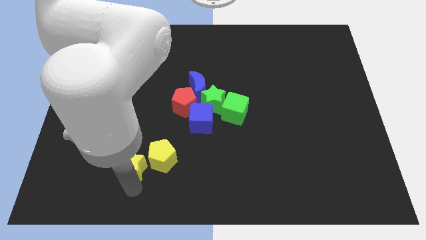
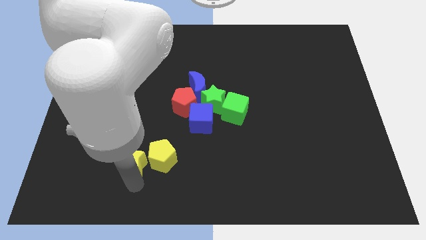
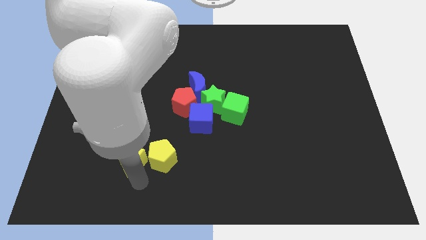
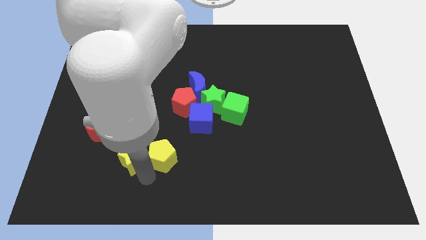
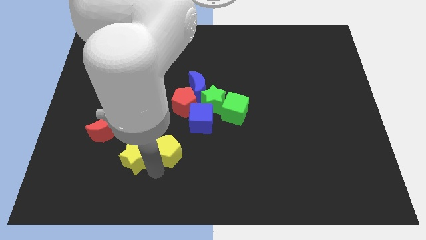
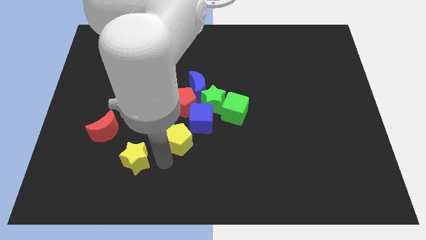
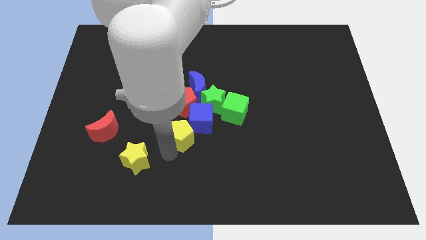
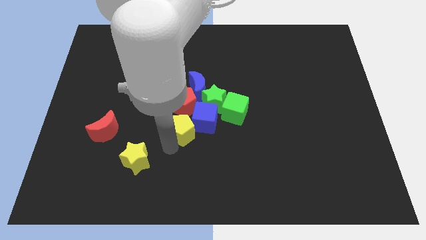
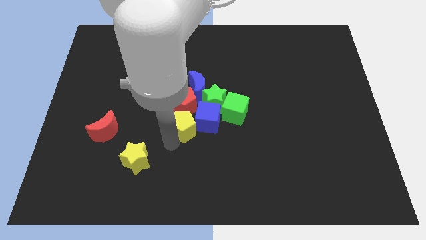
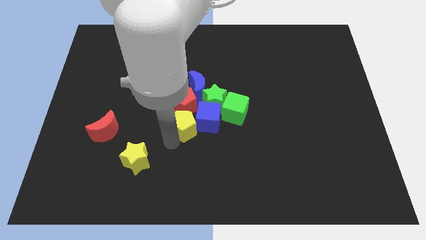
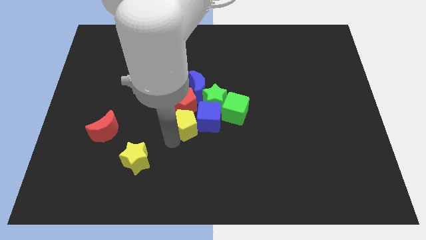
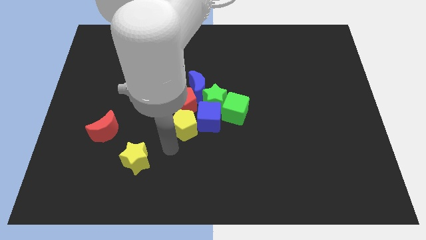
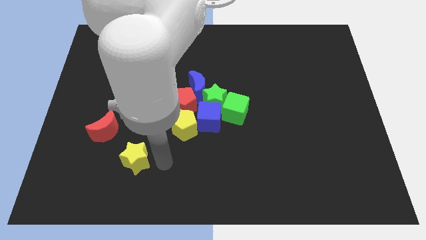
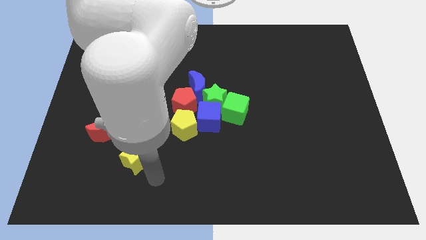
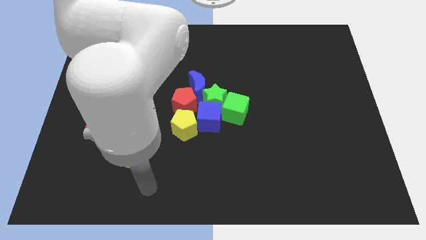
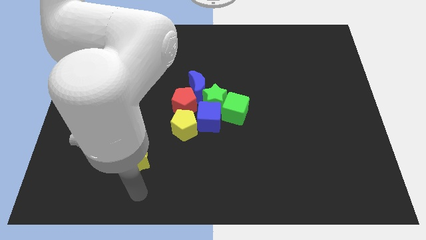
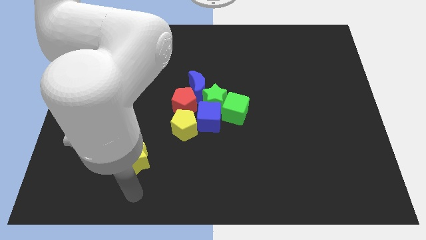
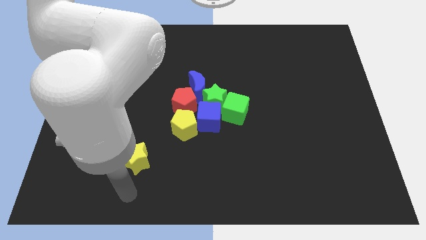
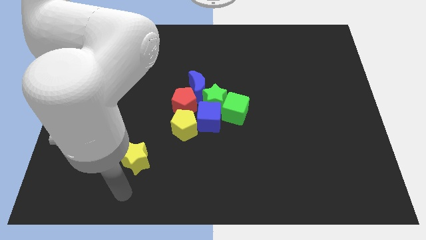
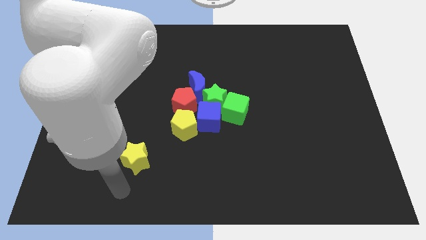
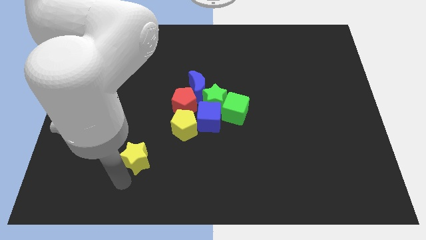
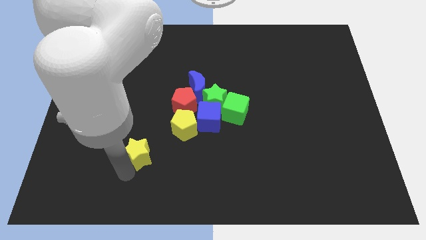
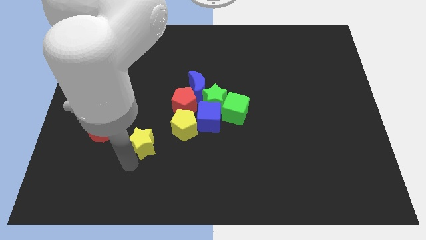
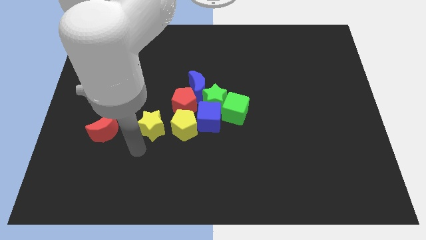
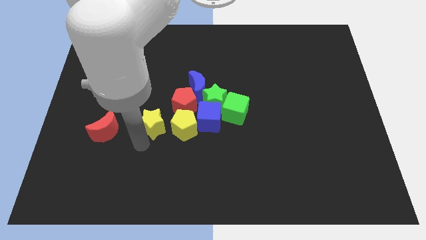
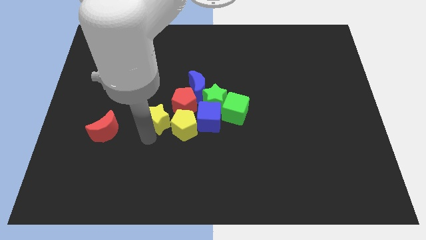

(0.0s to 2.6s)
push the yellow blocks into the groups of objects

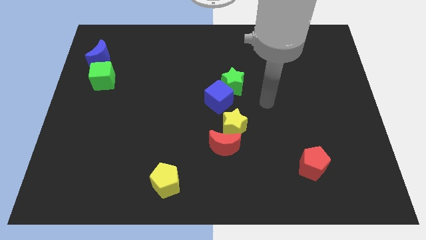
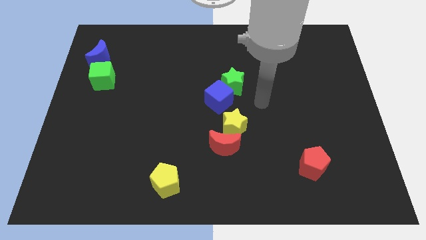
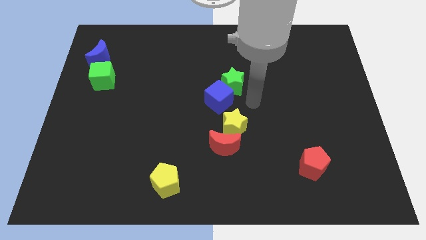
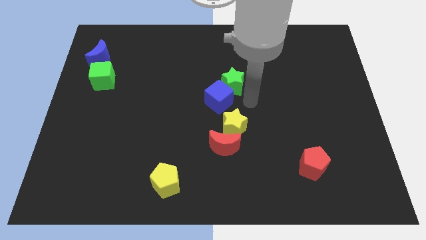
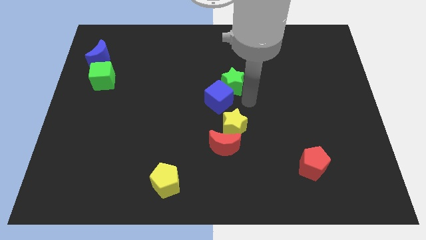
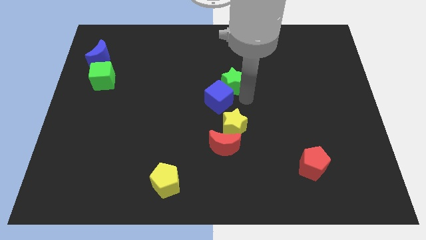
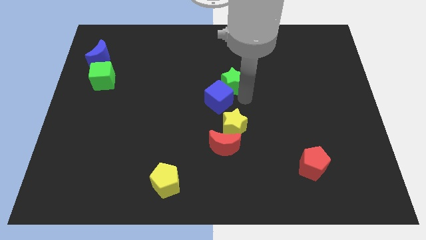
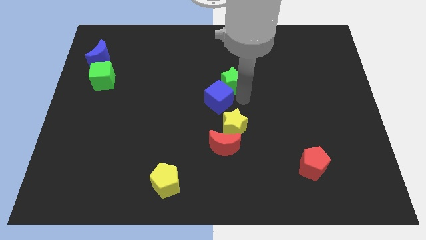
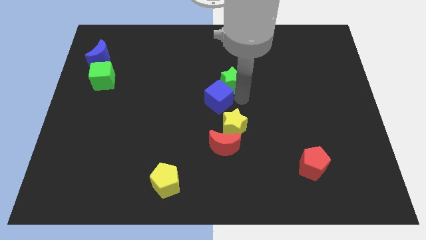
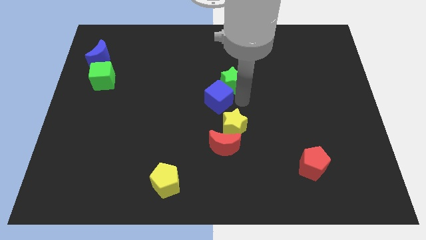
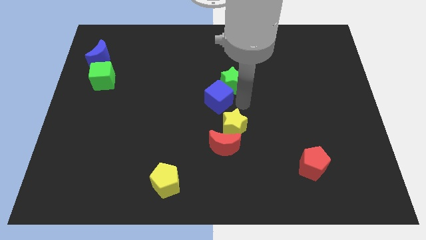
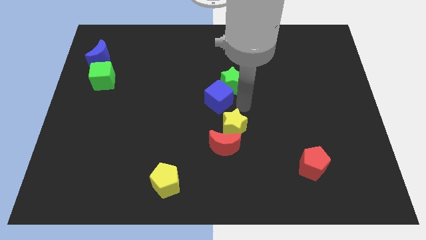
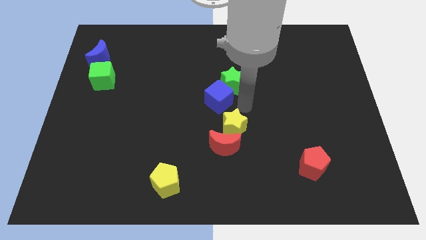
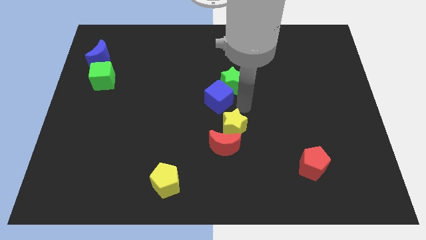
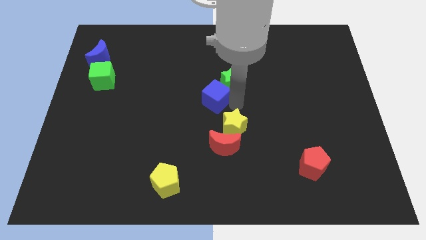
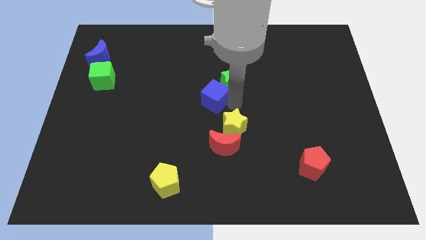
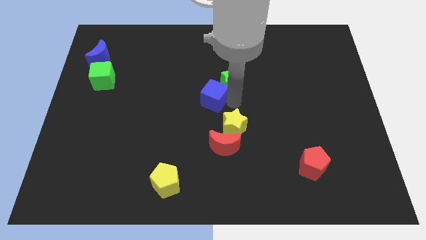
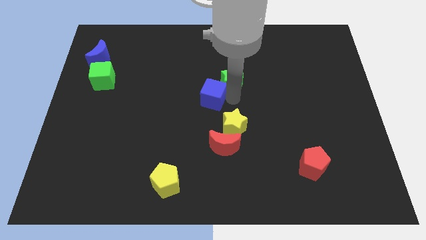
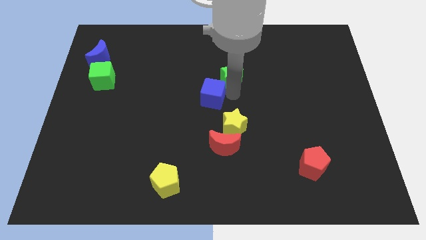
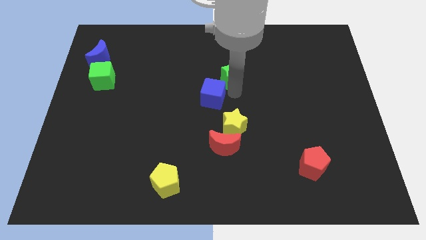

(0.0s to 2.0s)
slightly move the blue cube to the left

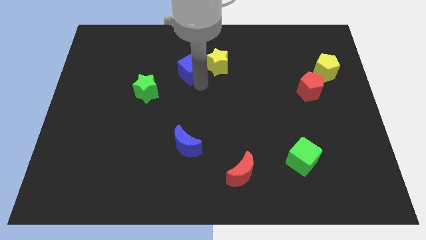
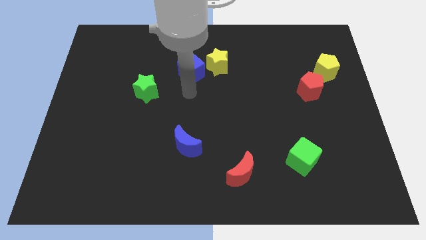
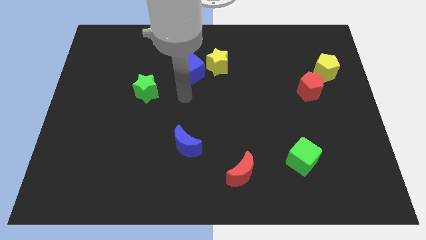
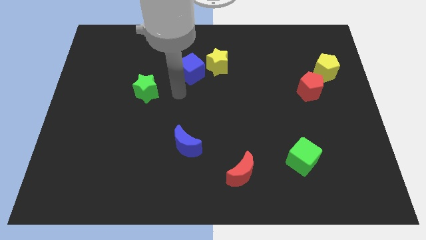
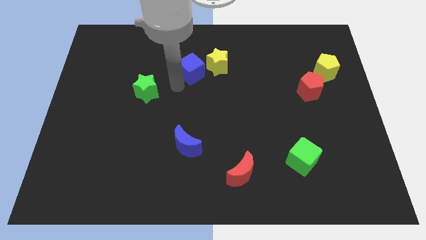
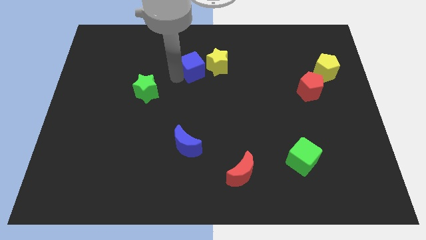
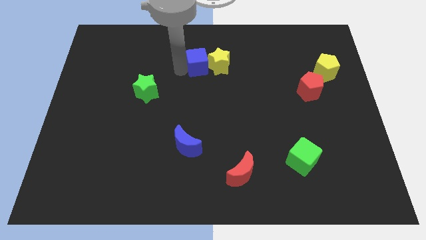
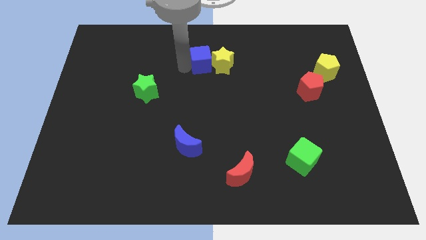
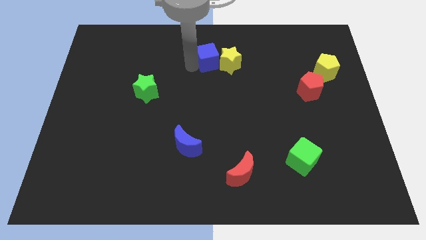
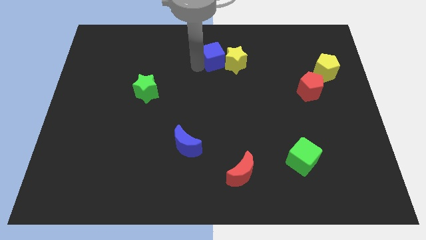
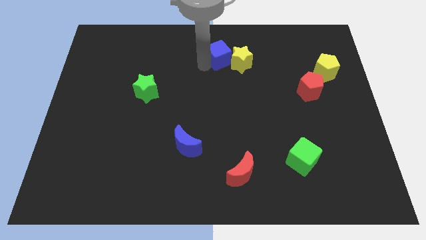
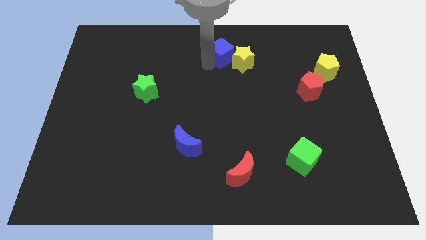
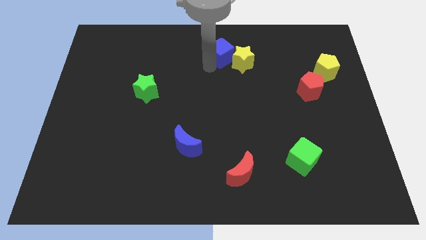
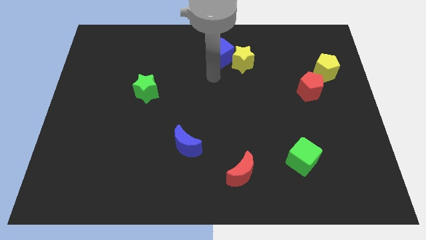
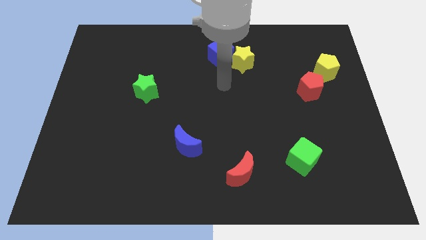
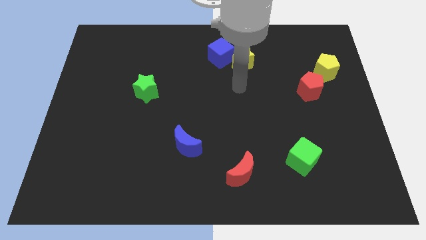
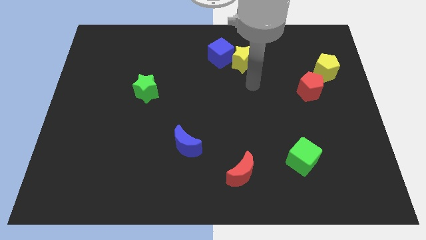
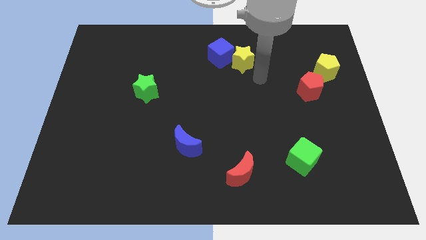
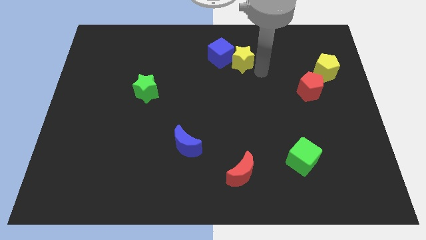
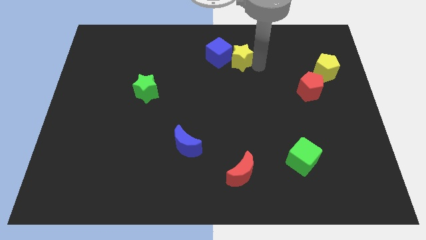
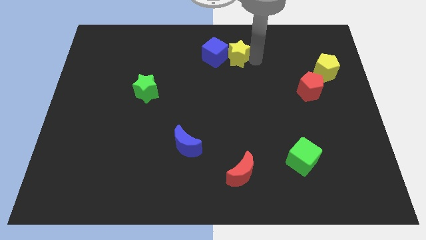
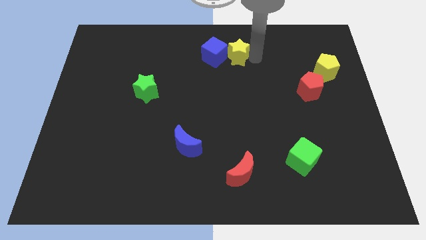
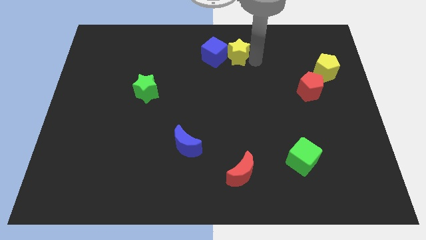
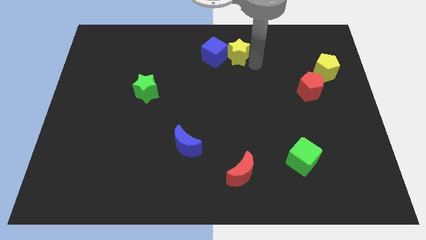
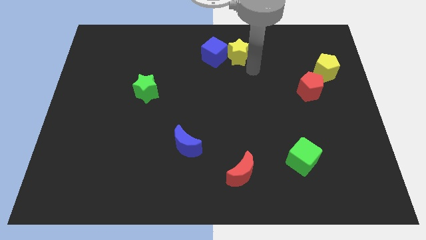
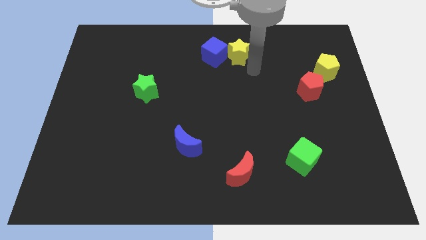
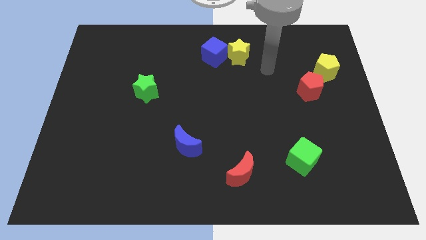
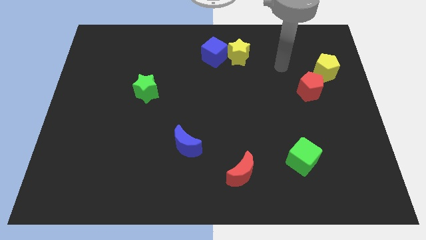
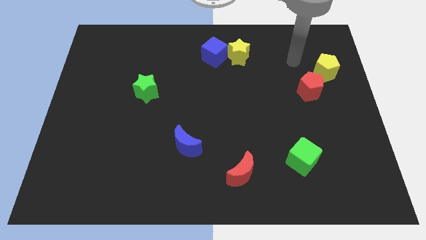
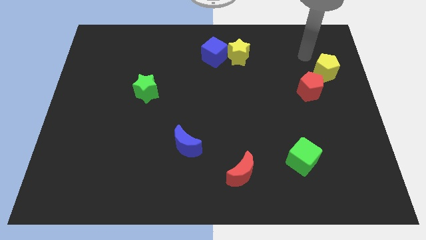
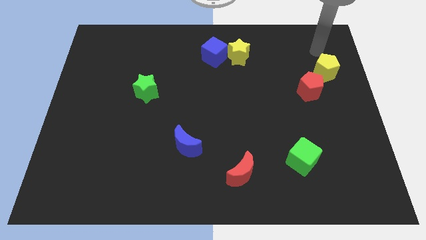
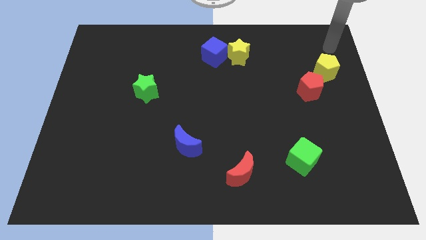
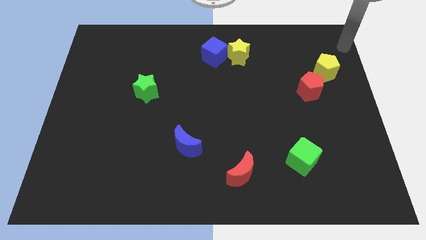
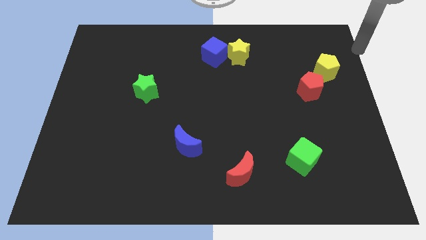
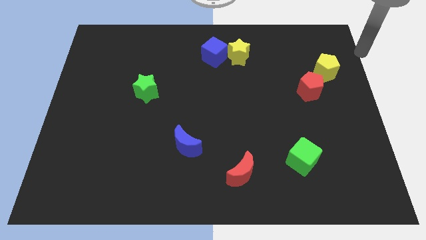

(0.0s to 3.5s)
move the blue cube and the yellow star towards the top center of the board

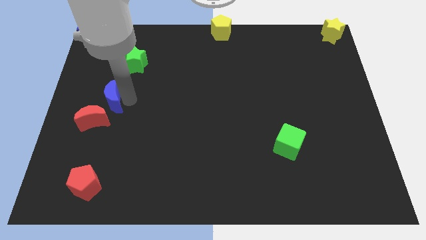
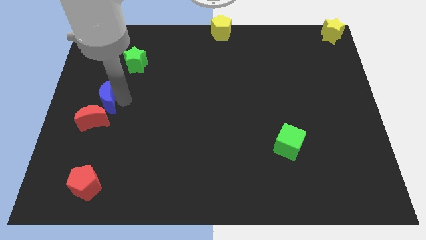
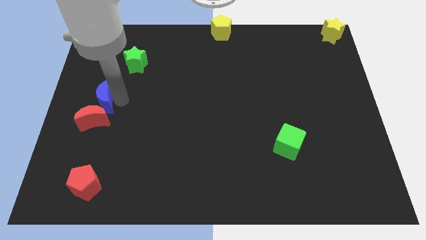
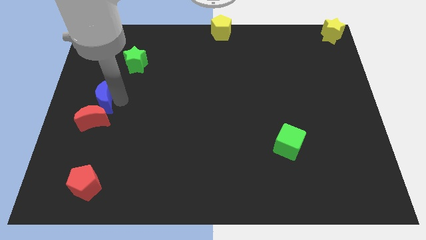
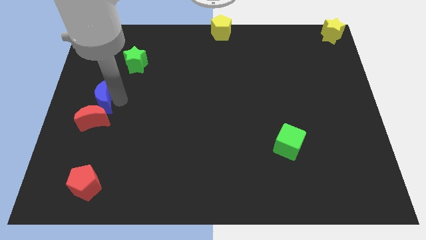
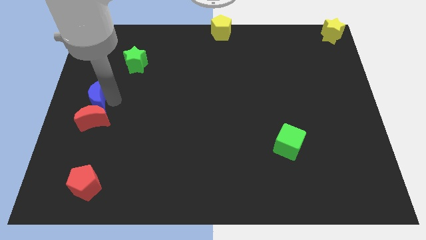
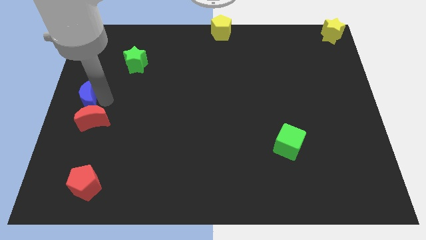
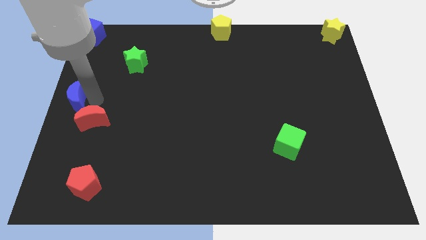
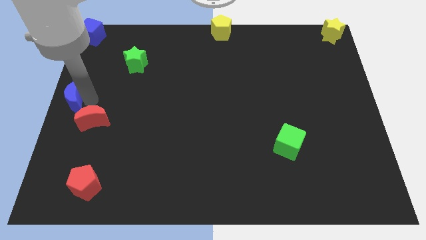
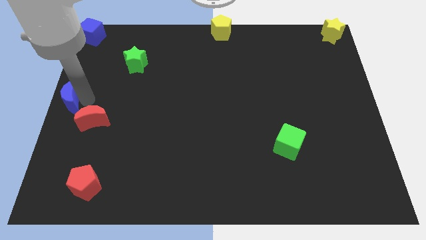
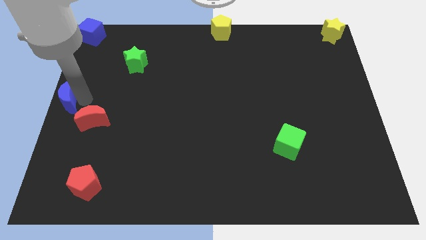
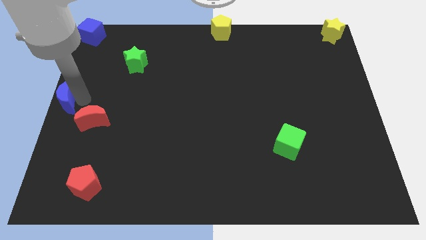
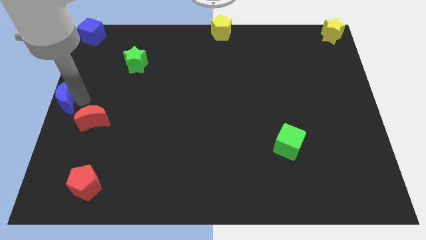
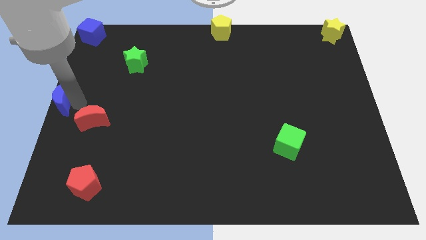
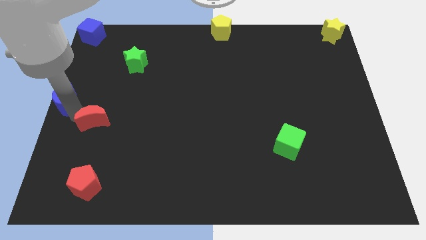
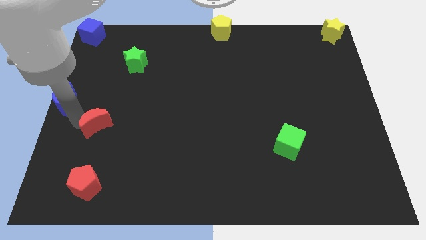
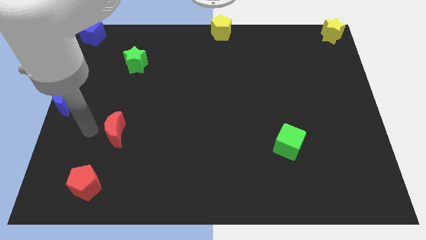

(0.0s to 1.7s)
move blue moon towards middle left corner of the board
